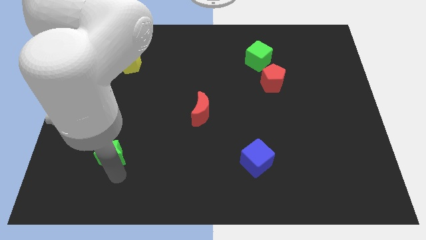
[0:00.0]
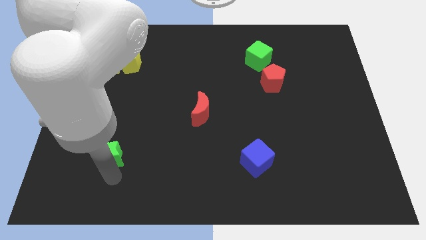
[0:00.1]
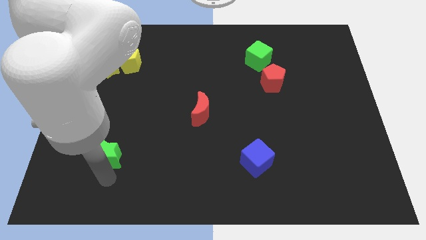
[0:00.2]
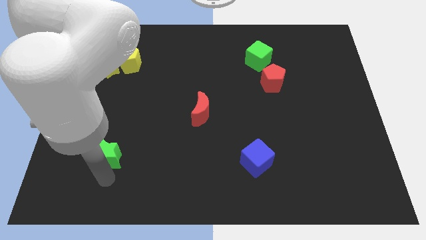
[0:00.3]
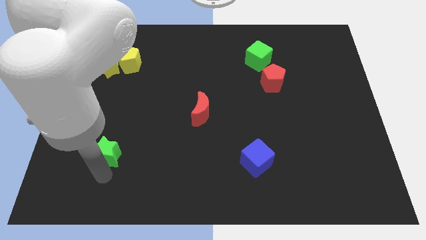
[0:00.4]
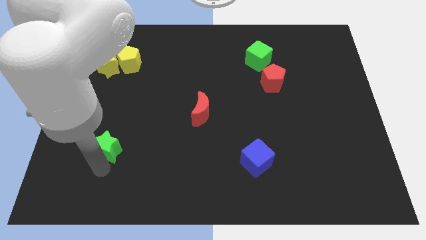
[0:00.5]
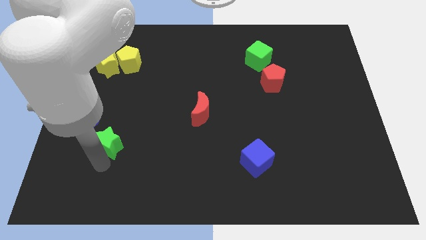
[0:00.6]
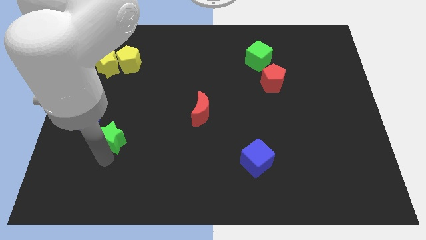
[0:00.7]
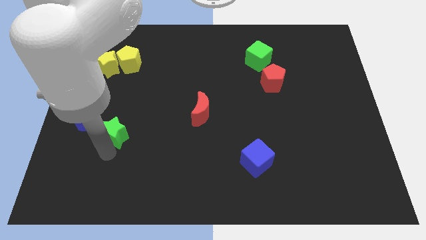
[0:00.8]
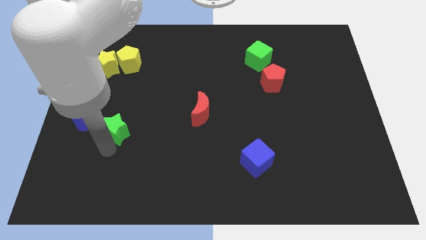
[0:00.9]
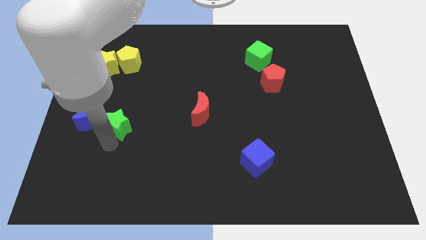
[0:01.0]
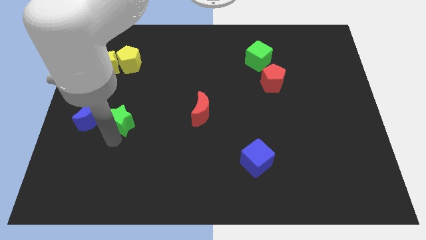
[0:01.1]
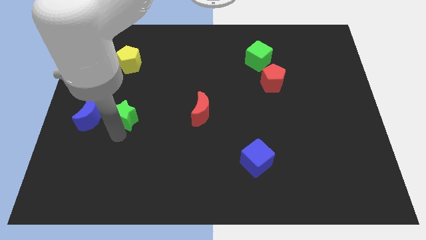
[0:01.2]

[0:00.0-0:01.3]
push the green star to the parallel right of the blue moon

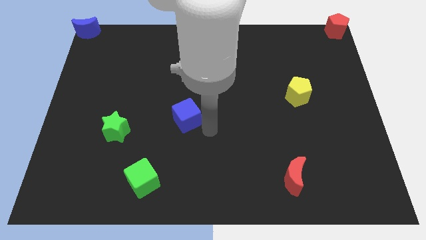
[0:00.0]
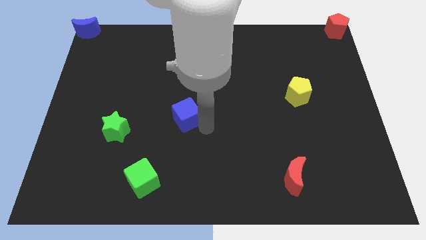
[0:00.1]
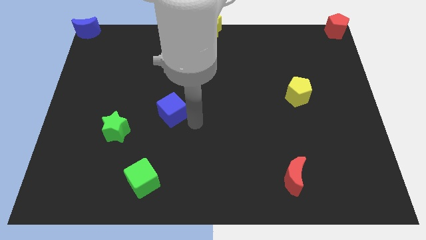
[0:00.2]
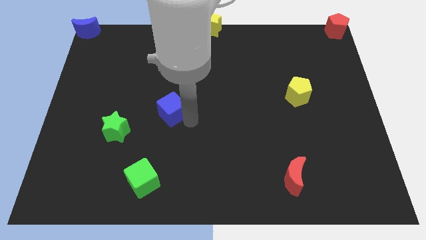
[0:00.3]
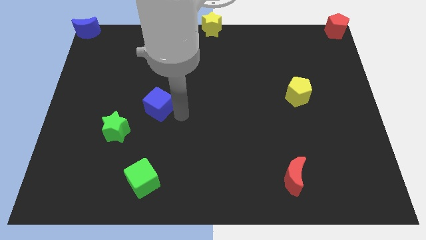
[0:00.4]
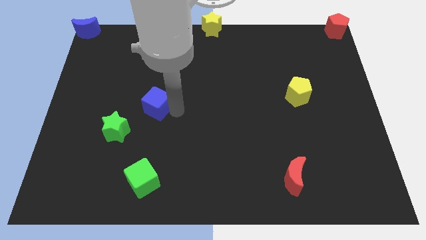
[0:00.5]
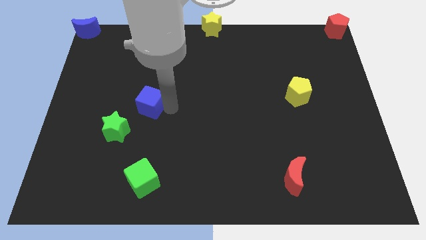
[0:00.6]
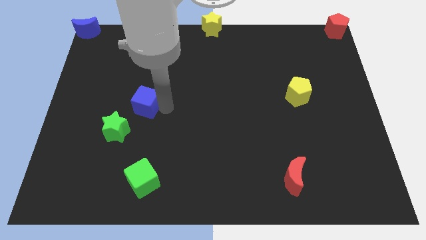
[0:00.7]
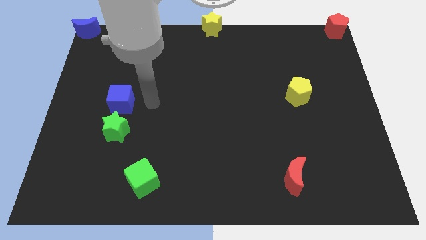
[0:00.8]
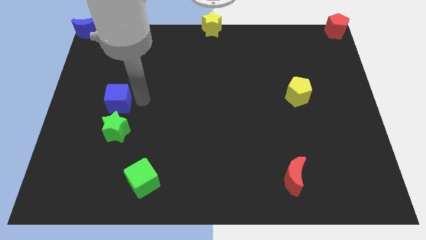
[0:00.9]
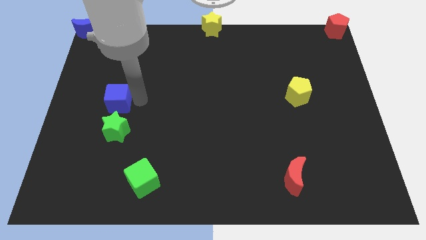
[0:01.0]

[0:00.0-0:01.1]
push the blue cube to the top side of the green star

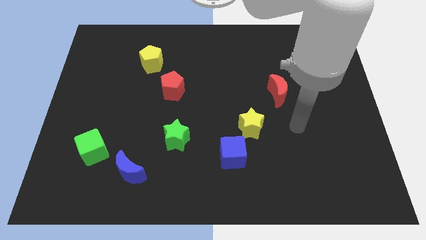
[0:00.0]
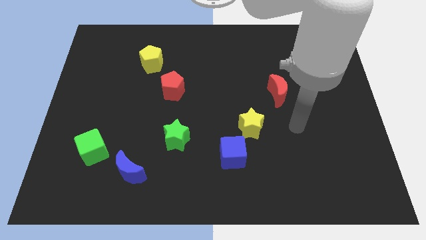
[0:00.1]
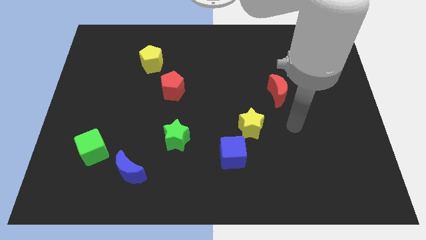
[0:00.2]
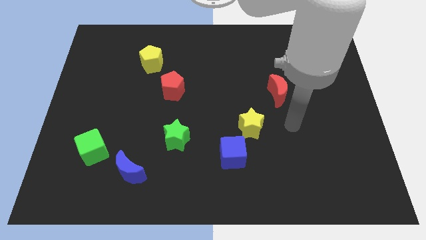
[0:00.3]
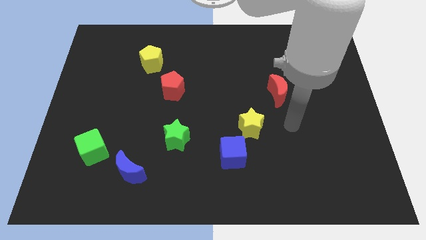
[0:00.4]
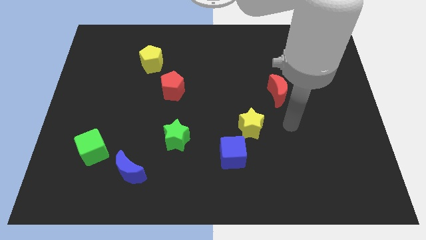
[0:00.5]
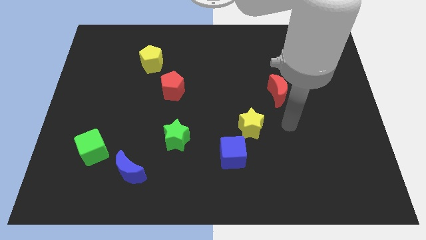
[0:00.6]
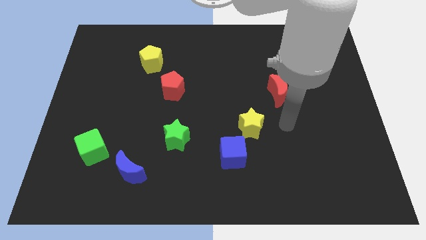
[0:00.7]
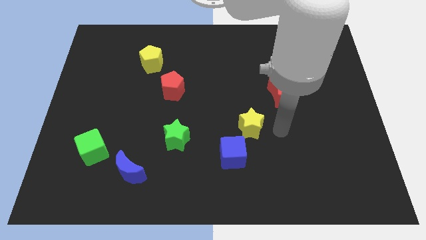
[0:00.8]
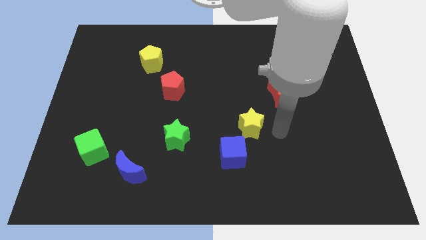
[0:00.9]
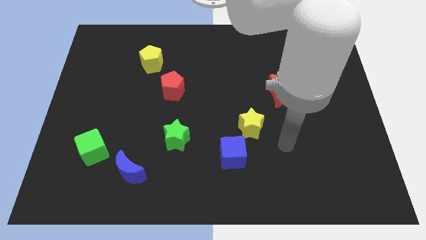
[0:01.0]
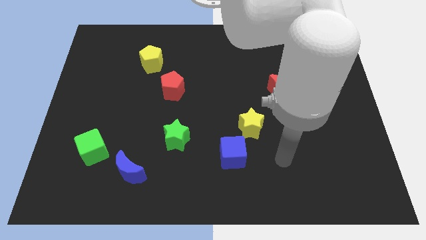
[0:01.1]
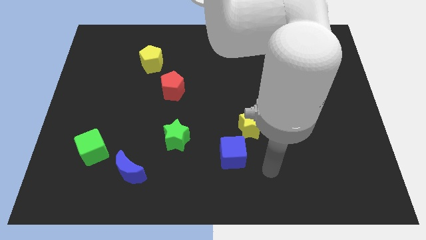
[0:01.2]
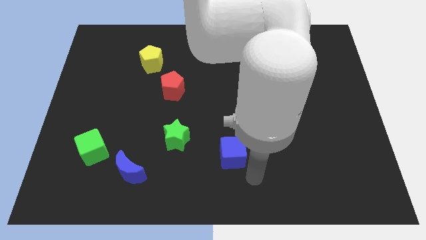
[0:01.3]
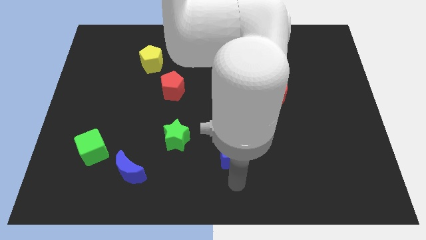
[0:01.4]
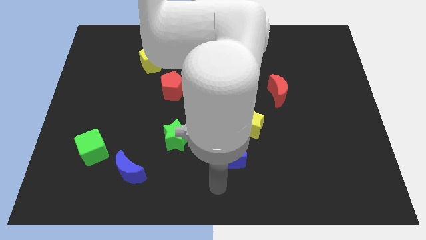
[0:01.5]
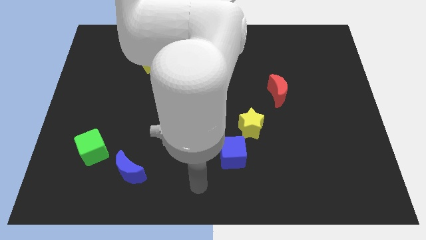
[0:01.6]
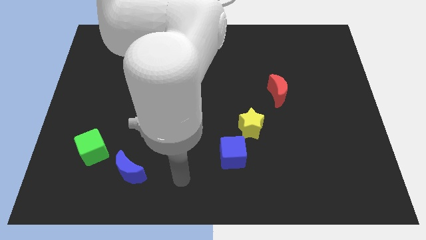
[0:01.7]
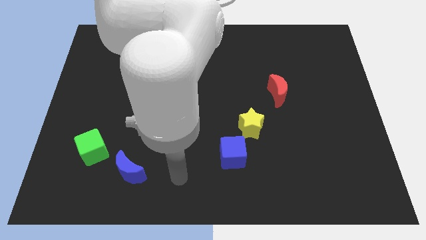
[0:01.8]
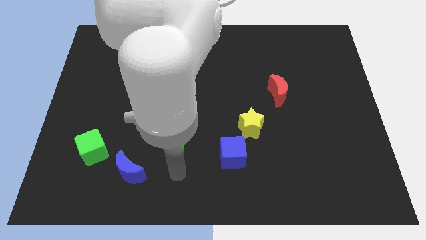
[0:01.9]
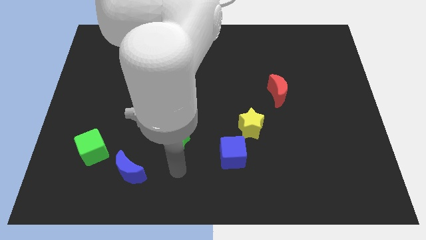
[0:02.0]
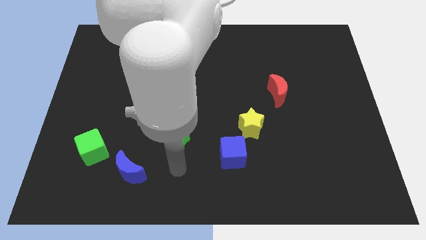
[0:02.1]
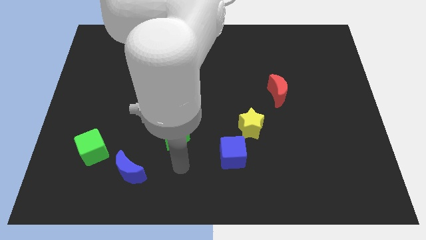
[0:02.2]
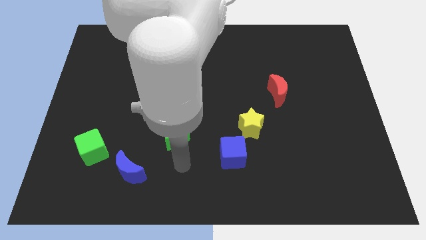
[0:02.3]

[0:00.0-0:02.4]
move your arm to the bottom of the green star

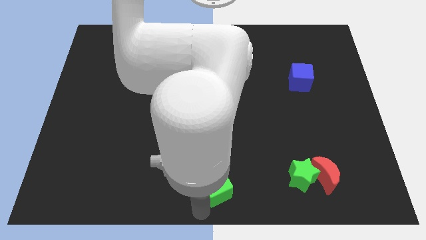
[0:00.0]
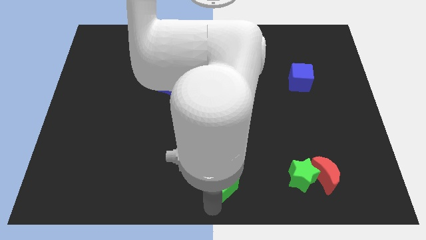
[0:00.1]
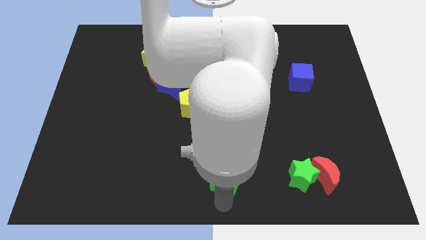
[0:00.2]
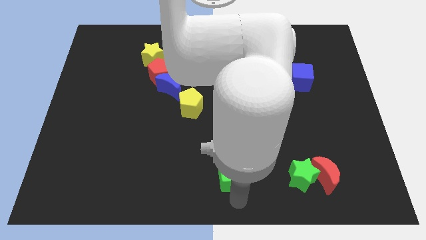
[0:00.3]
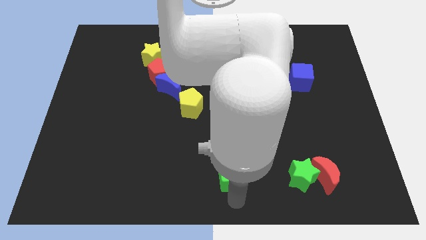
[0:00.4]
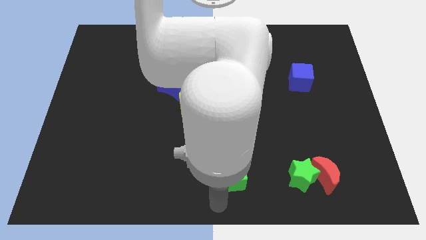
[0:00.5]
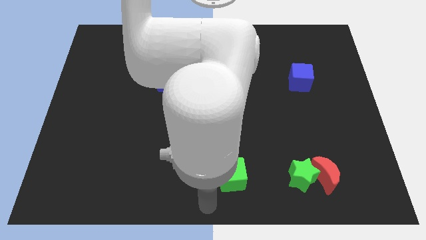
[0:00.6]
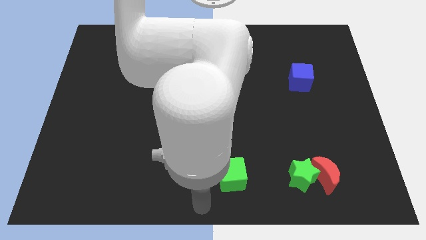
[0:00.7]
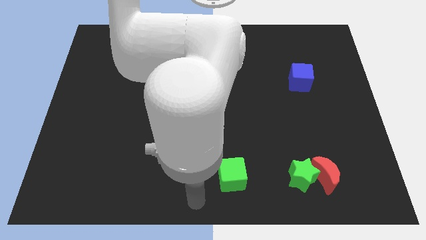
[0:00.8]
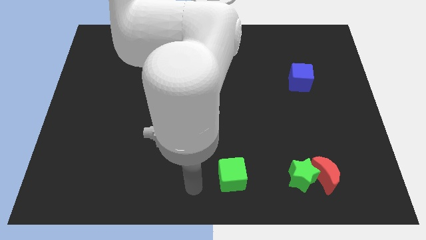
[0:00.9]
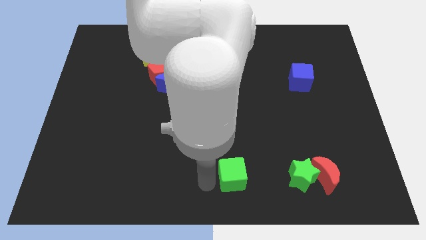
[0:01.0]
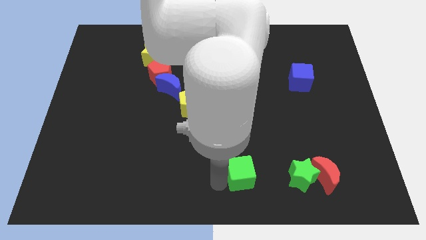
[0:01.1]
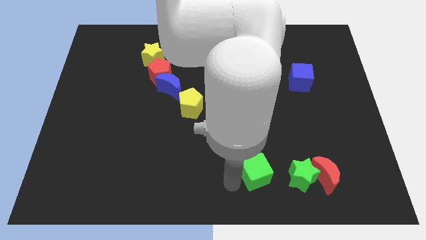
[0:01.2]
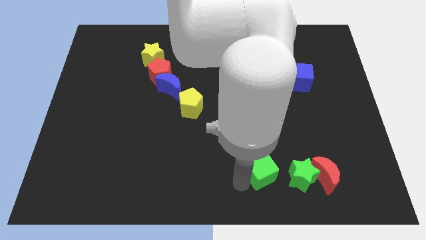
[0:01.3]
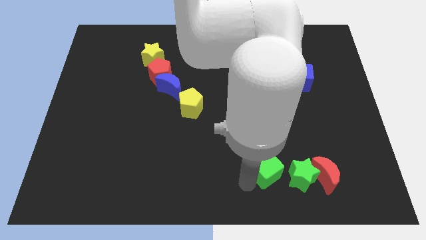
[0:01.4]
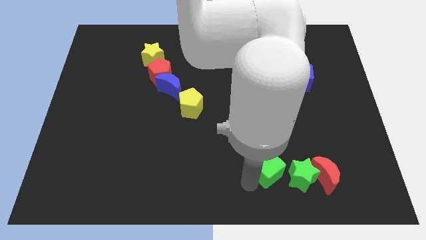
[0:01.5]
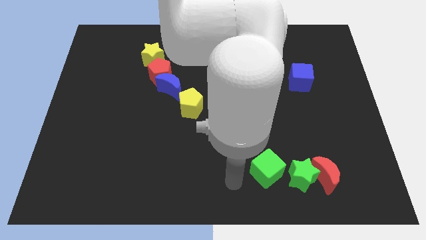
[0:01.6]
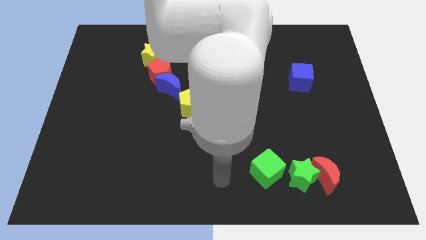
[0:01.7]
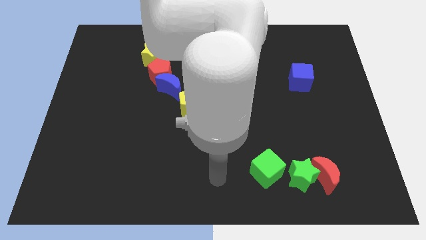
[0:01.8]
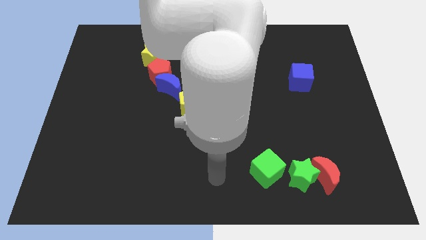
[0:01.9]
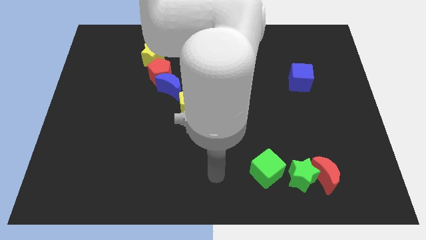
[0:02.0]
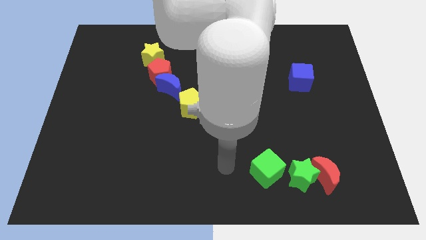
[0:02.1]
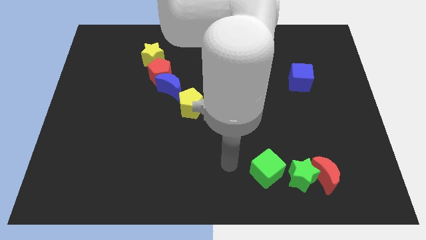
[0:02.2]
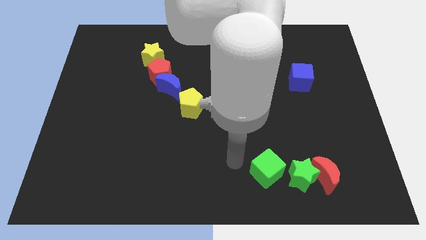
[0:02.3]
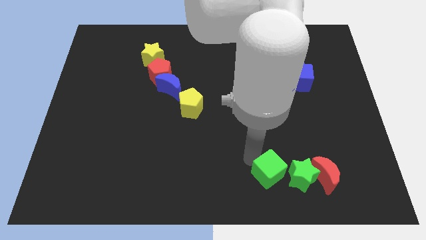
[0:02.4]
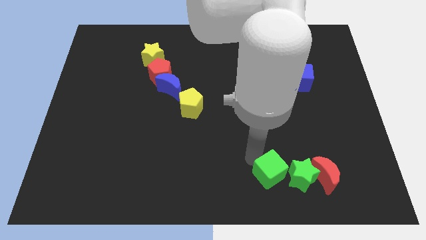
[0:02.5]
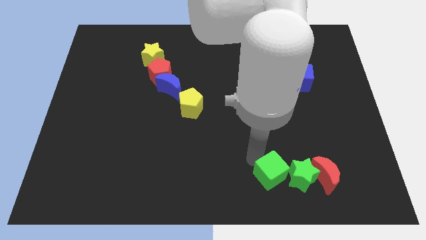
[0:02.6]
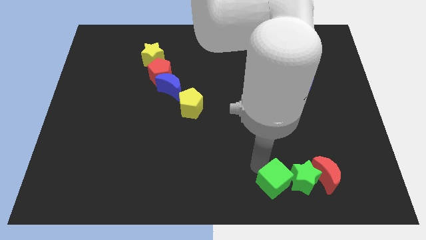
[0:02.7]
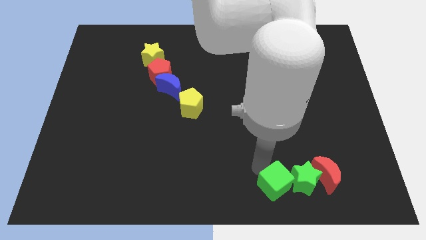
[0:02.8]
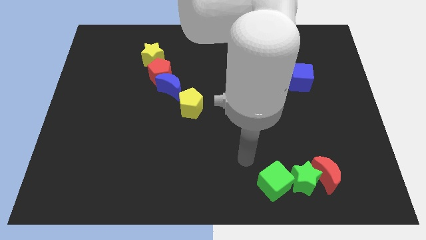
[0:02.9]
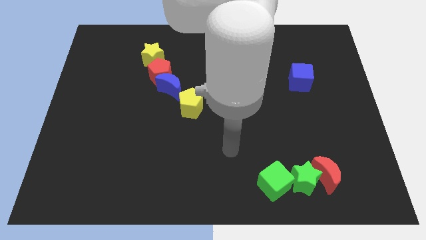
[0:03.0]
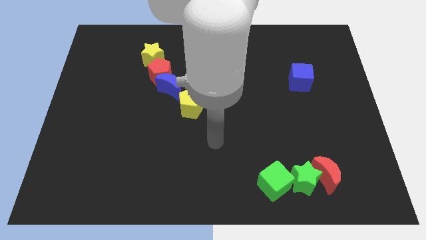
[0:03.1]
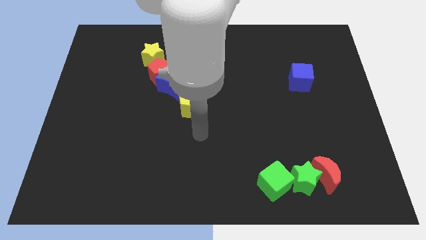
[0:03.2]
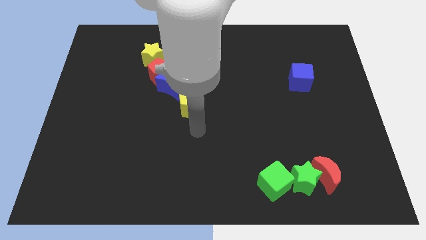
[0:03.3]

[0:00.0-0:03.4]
move the green cube to the left side of the green star

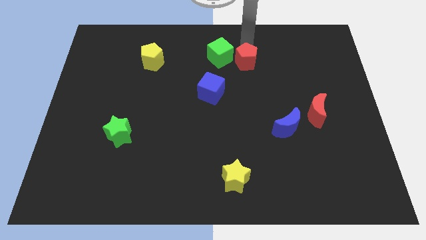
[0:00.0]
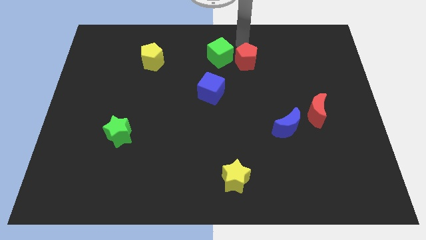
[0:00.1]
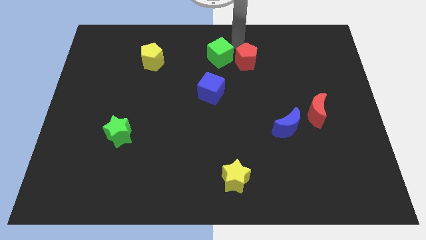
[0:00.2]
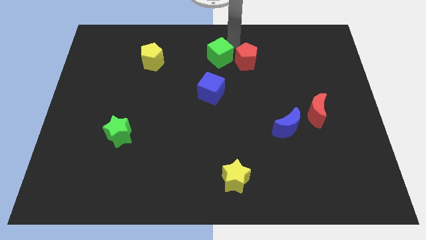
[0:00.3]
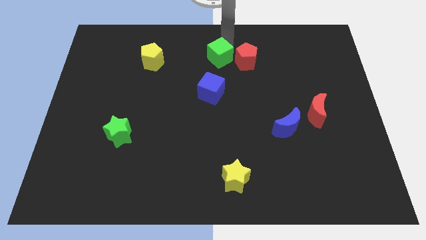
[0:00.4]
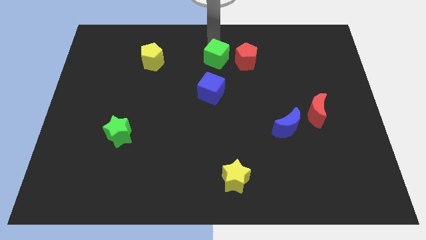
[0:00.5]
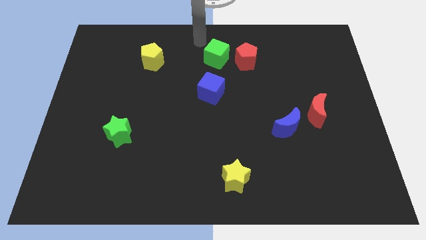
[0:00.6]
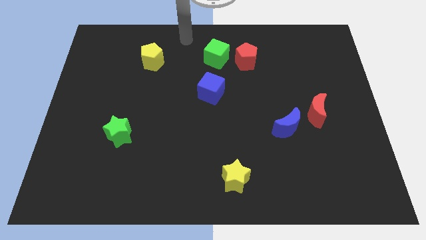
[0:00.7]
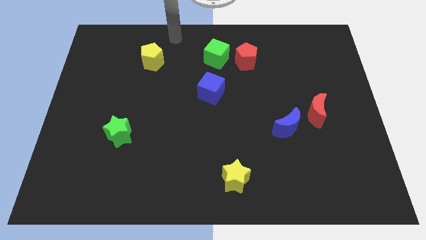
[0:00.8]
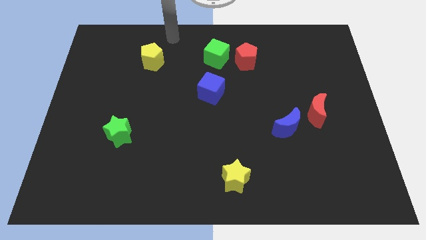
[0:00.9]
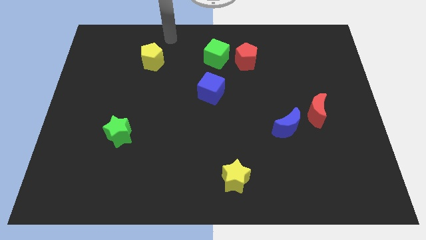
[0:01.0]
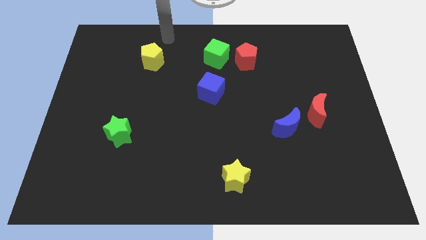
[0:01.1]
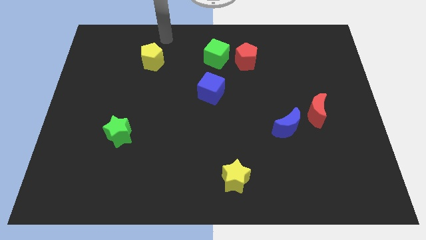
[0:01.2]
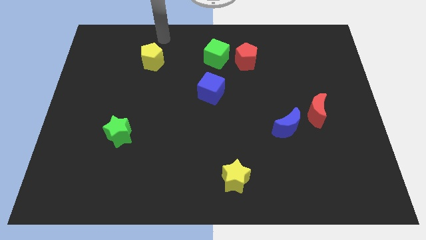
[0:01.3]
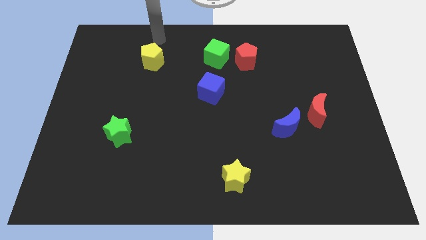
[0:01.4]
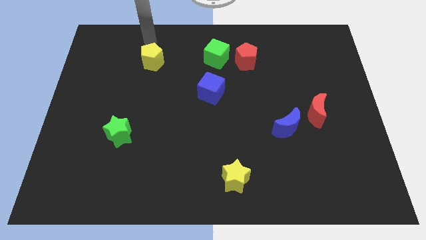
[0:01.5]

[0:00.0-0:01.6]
move your arm to the top of yellow pentagon
